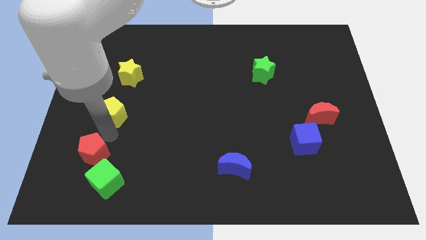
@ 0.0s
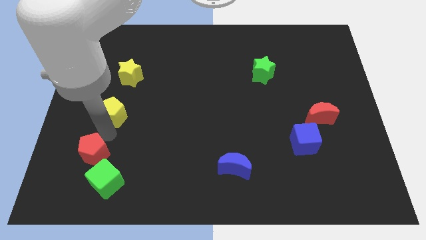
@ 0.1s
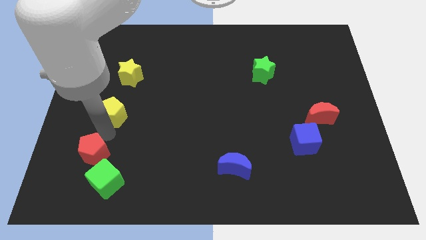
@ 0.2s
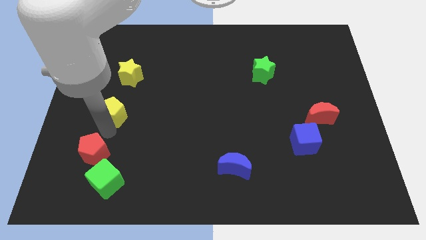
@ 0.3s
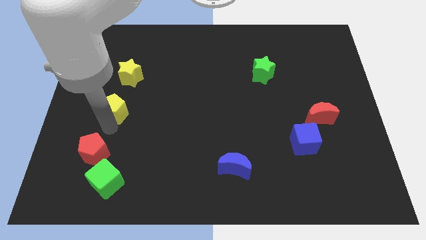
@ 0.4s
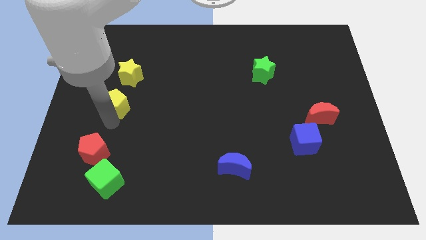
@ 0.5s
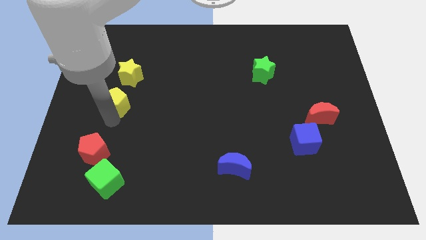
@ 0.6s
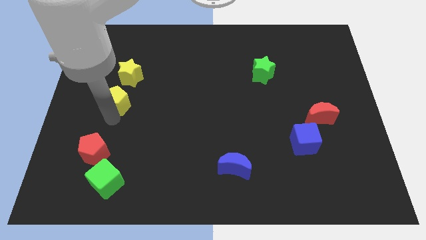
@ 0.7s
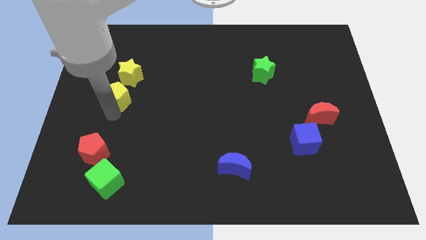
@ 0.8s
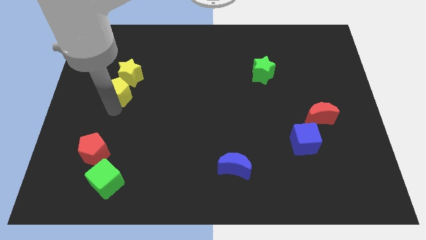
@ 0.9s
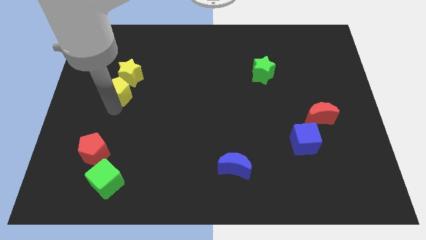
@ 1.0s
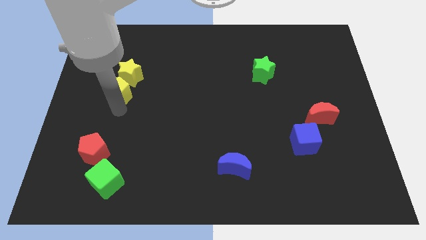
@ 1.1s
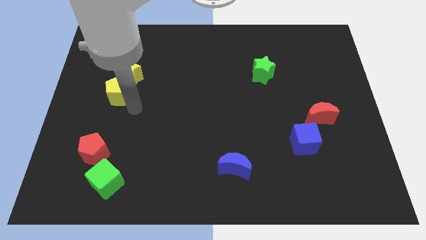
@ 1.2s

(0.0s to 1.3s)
place the yellow pentagon down to the yellow star

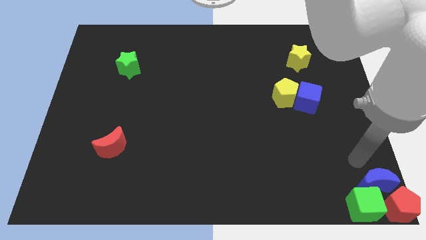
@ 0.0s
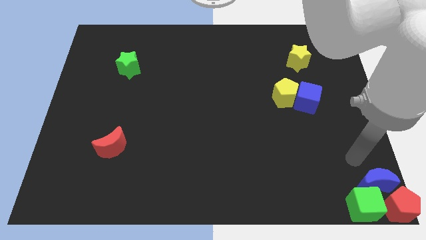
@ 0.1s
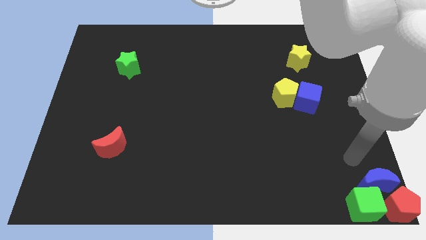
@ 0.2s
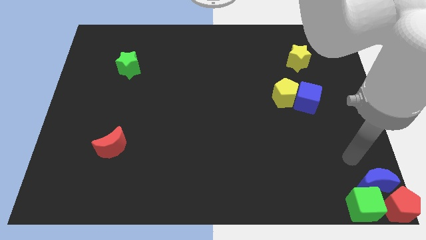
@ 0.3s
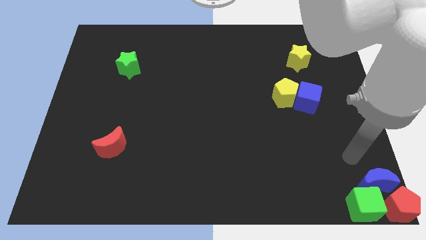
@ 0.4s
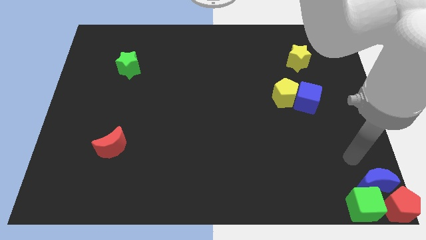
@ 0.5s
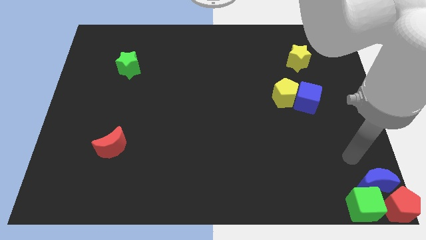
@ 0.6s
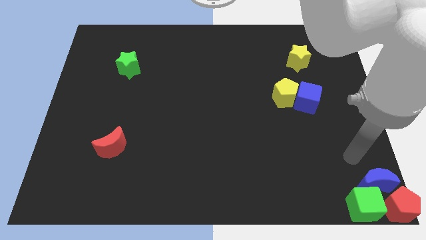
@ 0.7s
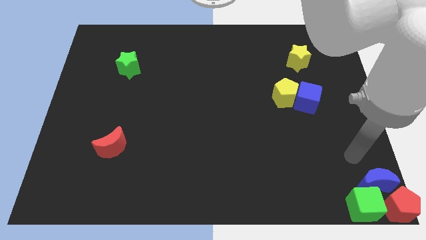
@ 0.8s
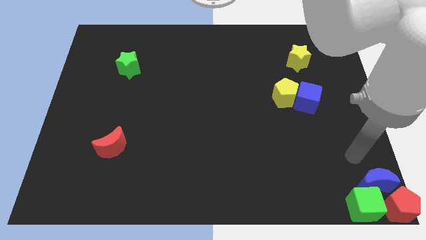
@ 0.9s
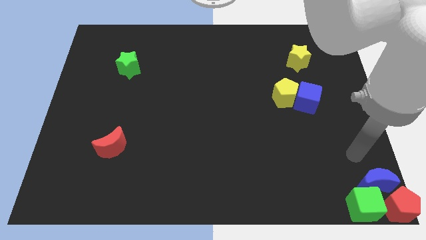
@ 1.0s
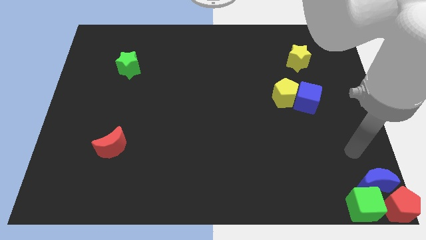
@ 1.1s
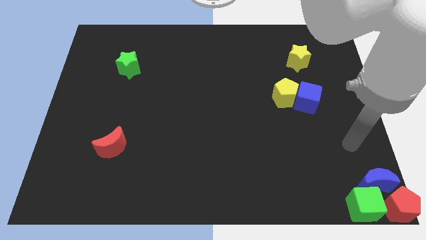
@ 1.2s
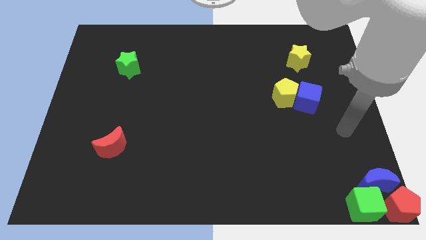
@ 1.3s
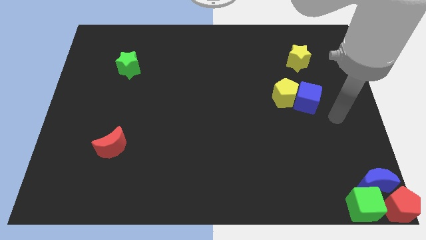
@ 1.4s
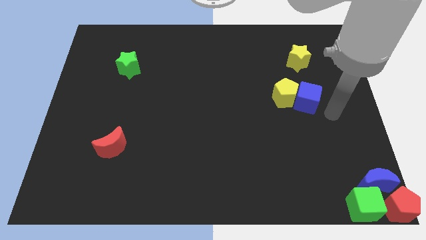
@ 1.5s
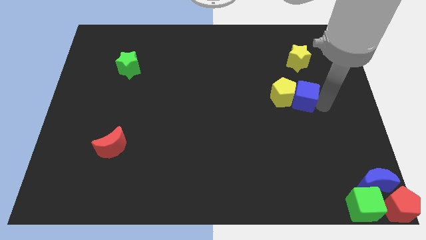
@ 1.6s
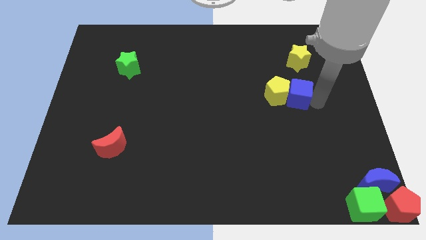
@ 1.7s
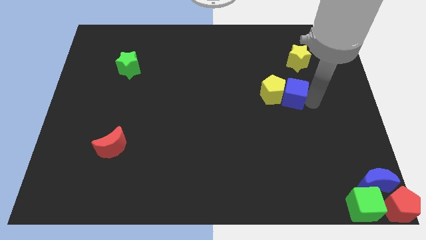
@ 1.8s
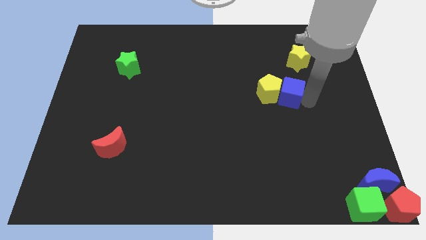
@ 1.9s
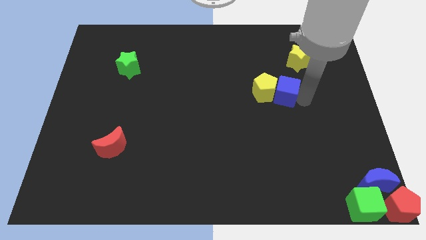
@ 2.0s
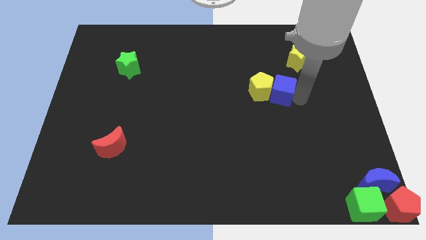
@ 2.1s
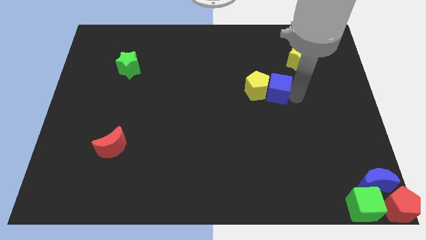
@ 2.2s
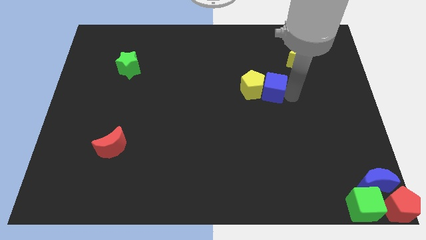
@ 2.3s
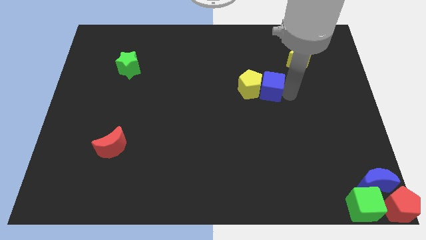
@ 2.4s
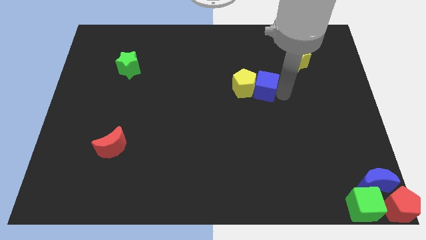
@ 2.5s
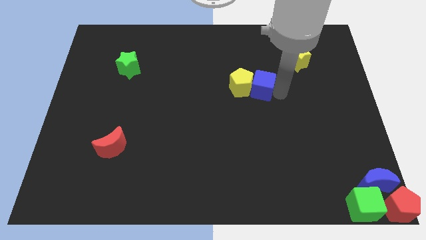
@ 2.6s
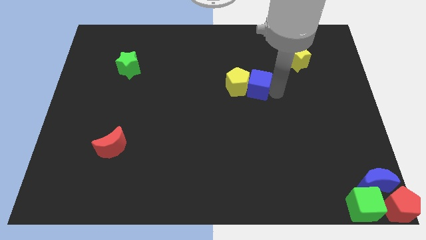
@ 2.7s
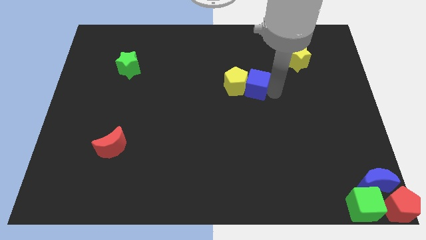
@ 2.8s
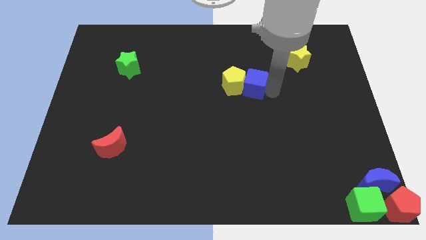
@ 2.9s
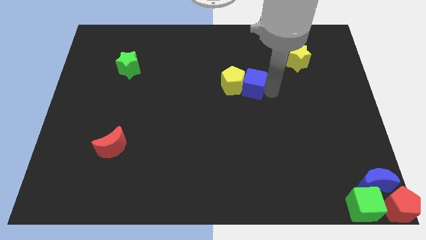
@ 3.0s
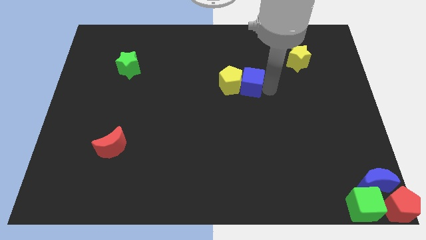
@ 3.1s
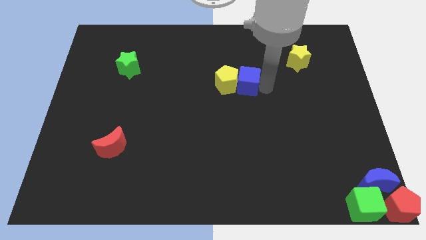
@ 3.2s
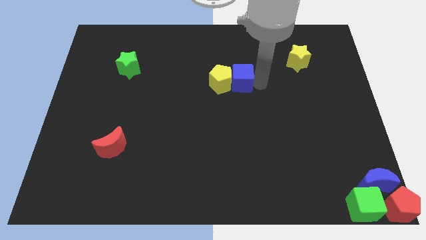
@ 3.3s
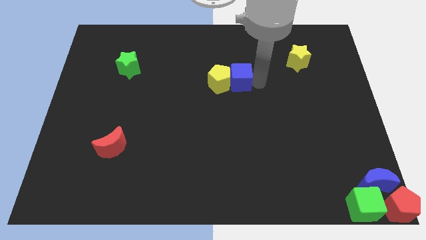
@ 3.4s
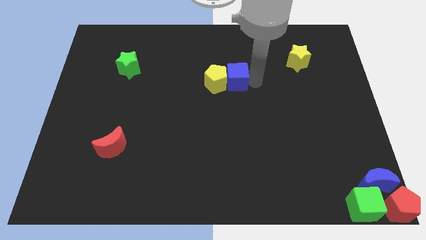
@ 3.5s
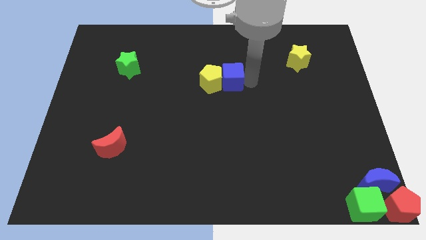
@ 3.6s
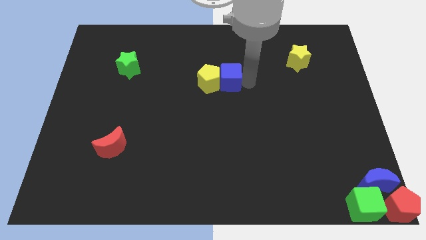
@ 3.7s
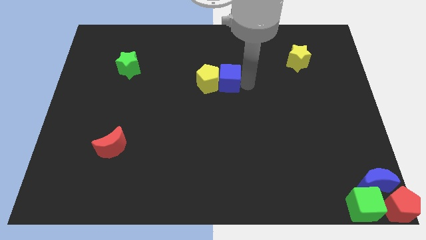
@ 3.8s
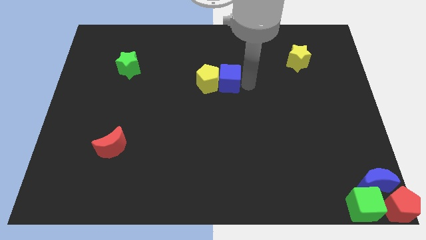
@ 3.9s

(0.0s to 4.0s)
move the blue cube and yellow pentagon towards the center of the board

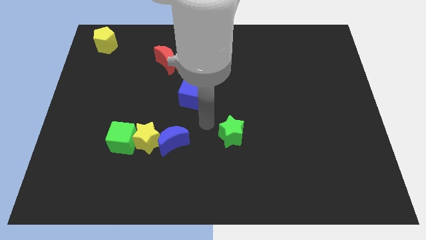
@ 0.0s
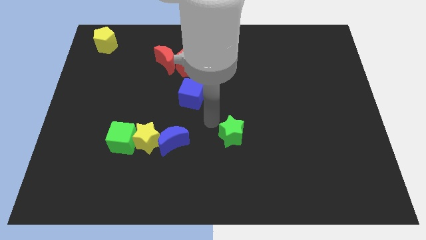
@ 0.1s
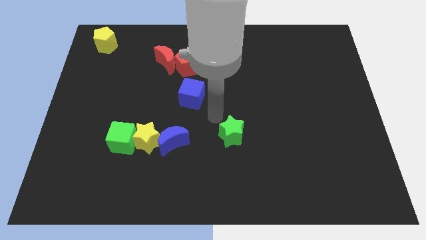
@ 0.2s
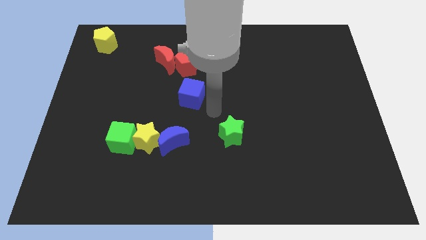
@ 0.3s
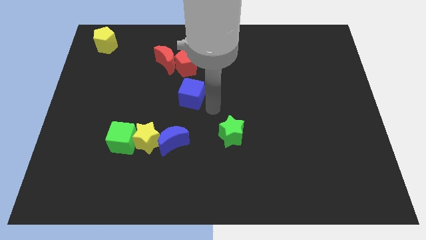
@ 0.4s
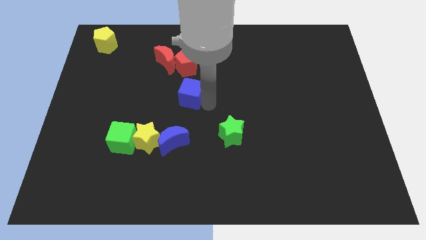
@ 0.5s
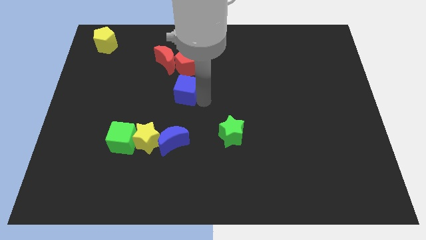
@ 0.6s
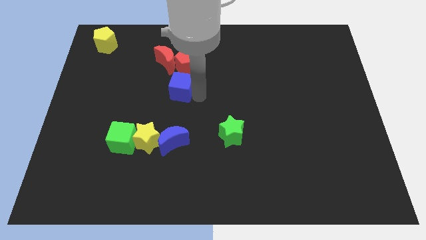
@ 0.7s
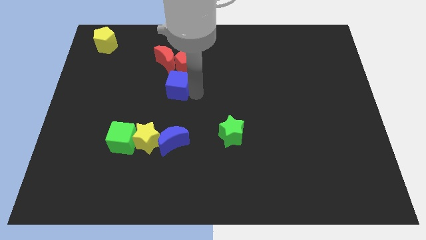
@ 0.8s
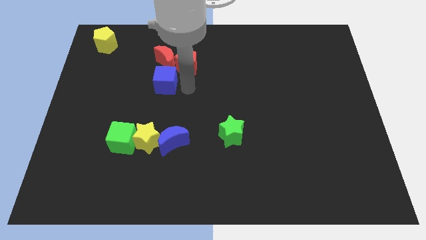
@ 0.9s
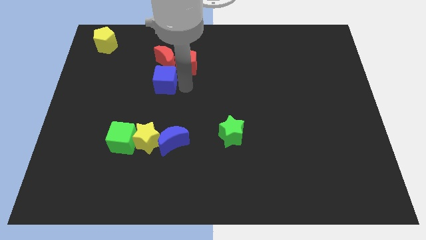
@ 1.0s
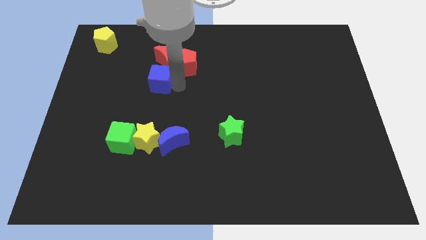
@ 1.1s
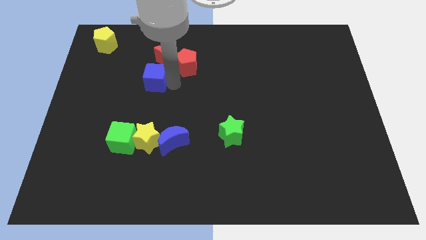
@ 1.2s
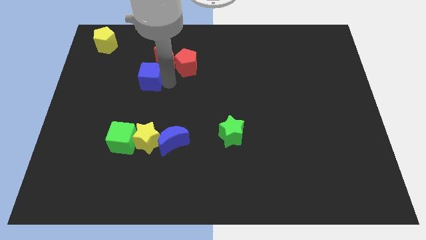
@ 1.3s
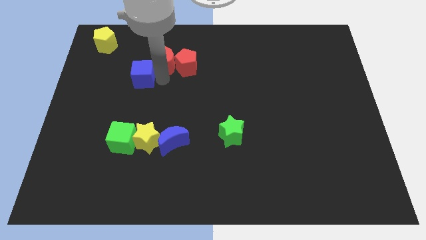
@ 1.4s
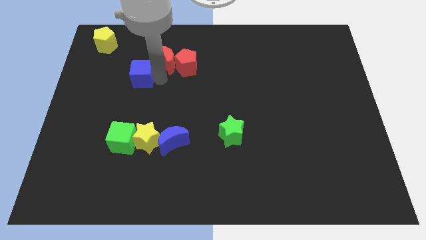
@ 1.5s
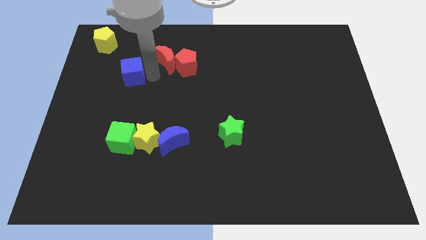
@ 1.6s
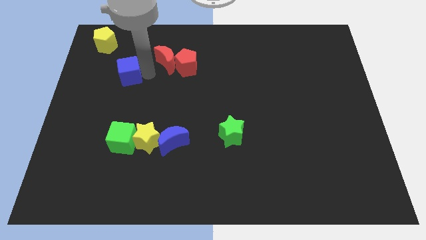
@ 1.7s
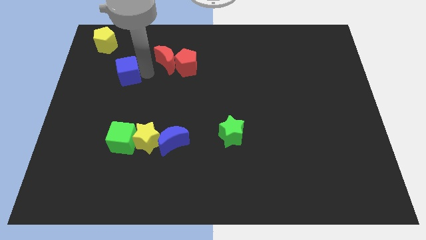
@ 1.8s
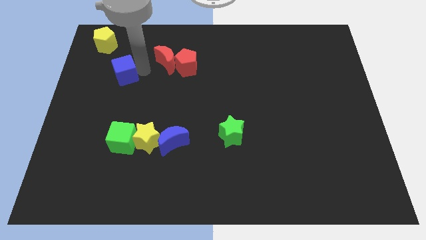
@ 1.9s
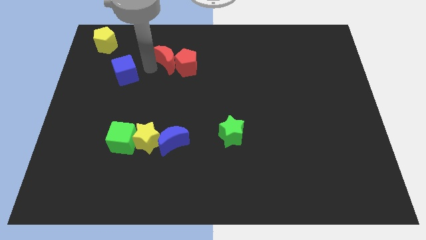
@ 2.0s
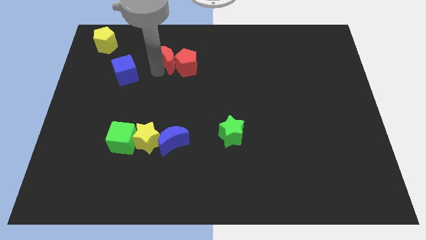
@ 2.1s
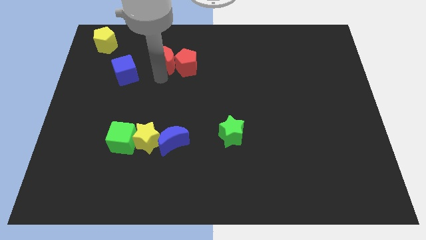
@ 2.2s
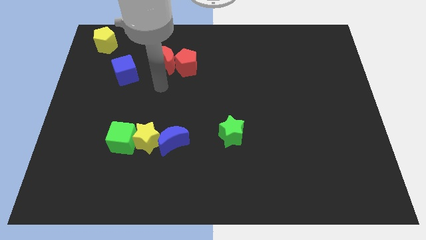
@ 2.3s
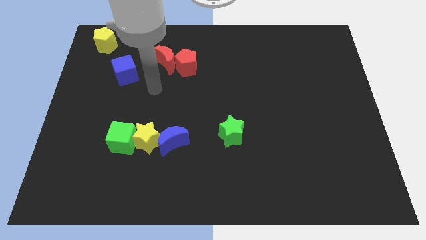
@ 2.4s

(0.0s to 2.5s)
move the blue cube to the bottom right of the yellow pentagon

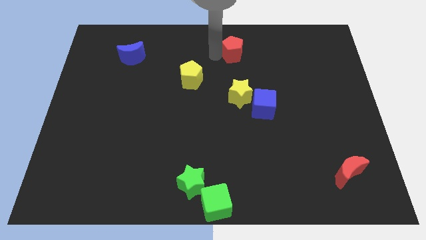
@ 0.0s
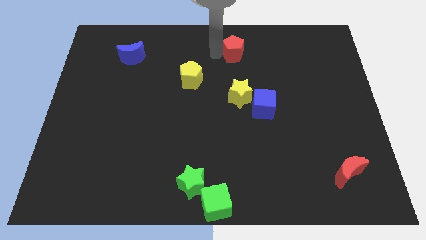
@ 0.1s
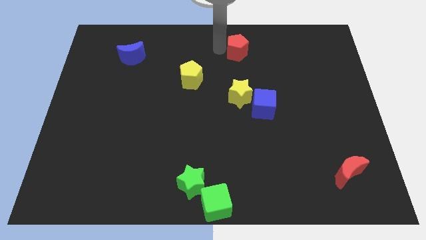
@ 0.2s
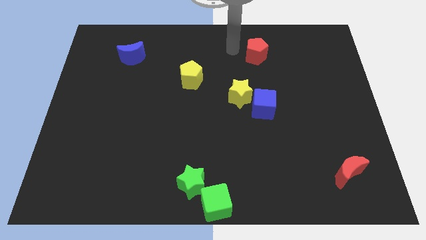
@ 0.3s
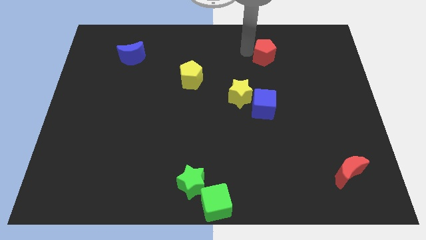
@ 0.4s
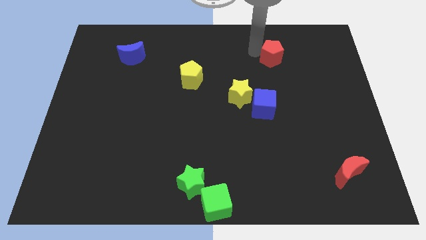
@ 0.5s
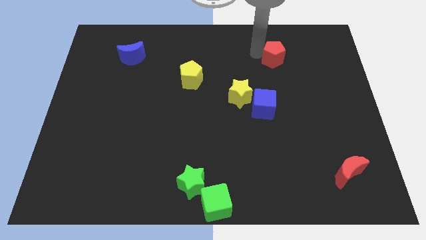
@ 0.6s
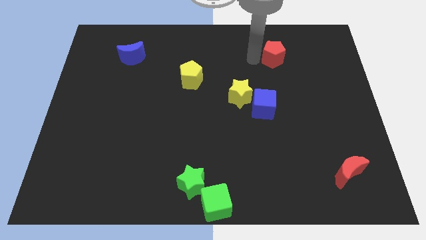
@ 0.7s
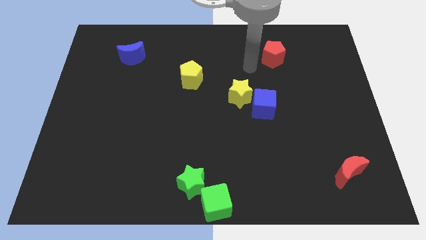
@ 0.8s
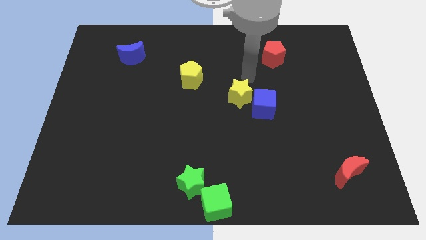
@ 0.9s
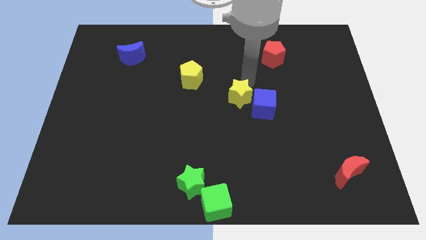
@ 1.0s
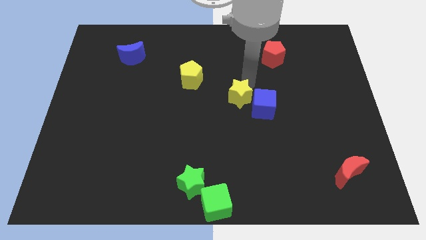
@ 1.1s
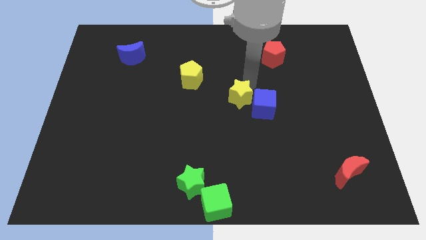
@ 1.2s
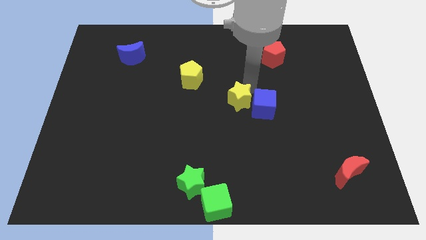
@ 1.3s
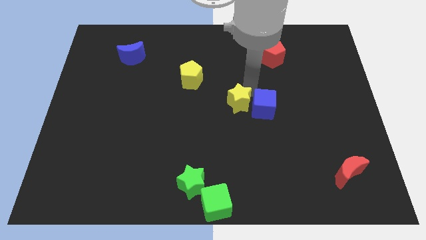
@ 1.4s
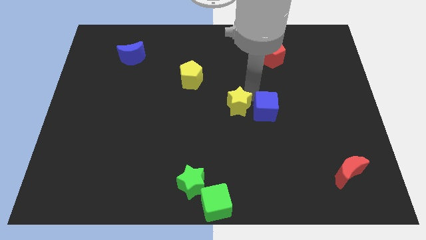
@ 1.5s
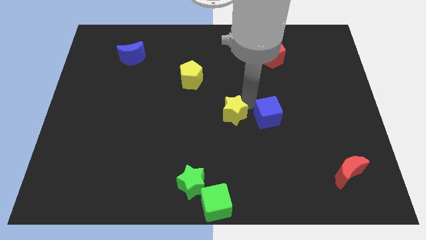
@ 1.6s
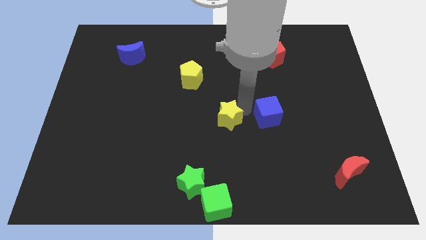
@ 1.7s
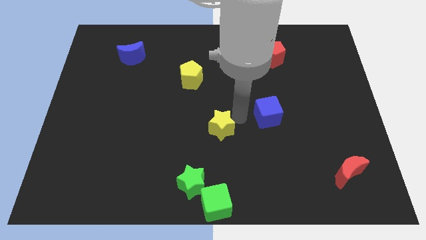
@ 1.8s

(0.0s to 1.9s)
push the yellow star to the left side of the blue cube
